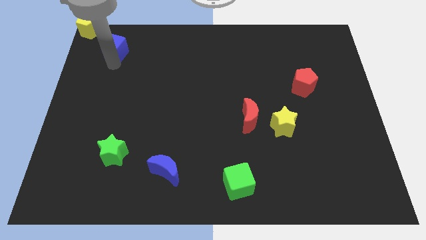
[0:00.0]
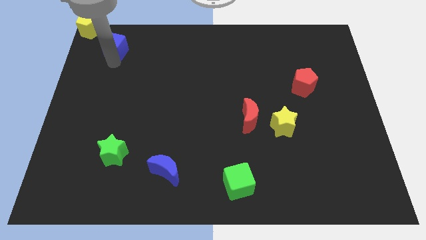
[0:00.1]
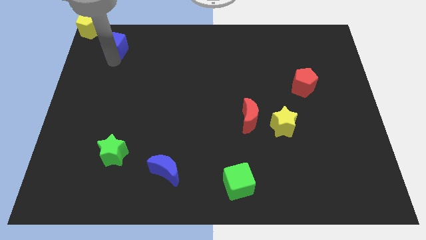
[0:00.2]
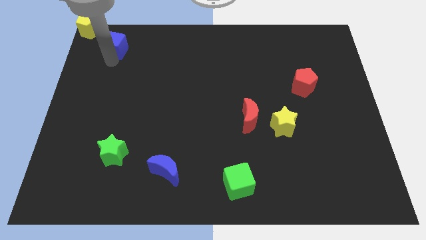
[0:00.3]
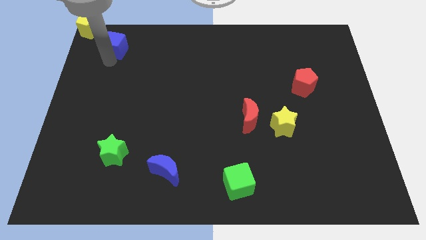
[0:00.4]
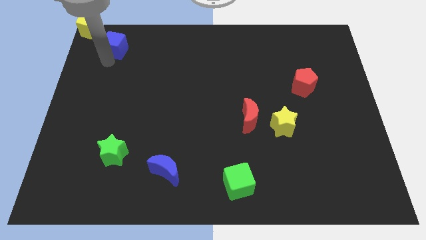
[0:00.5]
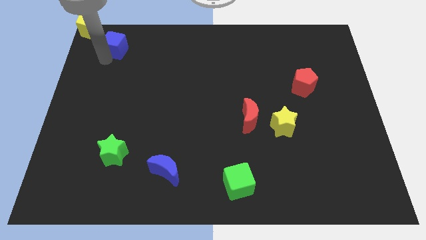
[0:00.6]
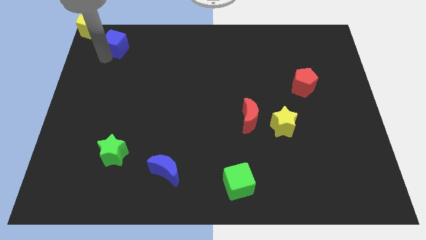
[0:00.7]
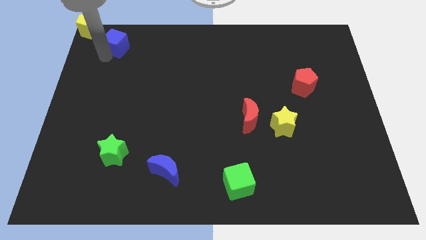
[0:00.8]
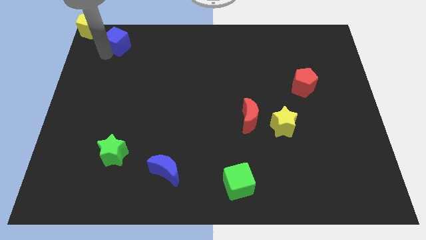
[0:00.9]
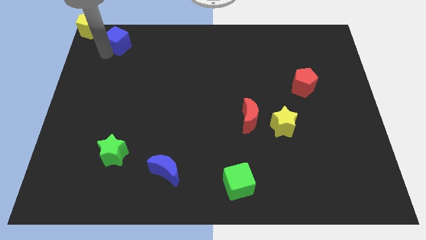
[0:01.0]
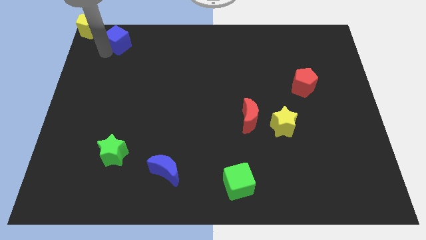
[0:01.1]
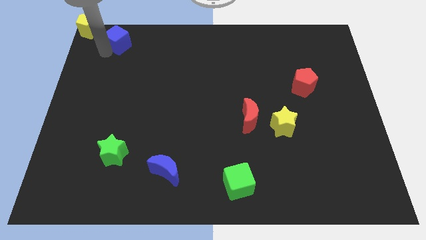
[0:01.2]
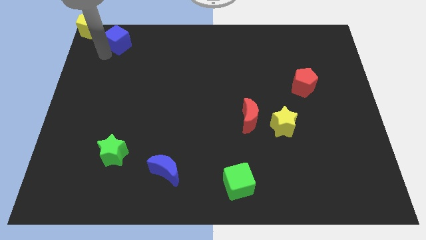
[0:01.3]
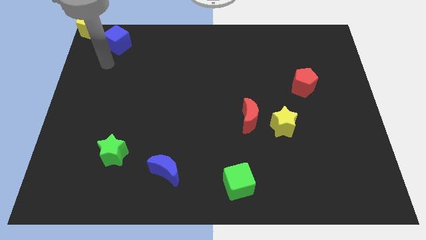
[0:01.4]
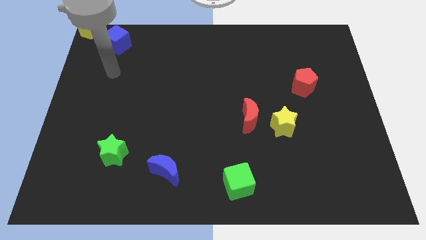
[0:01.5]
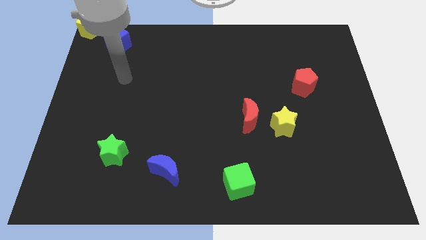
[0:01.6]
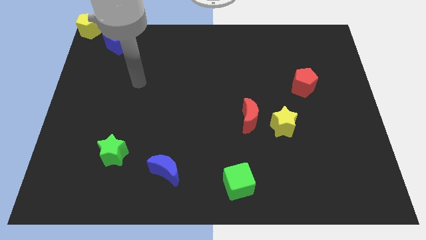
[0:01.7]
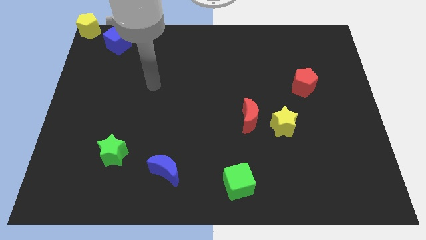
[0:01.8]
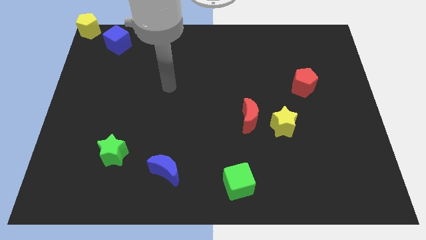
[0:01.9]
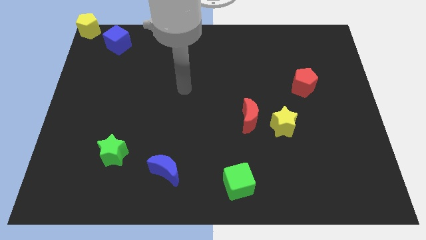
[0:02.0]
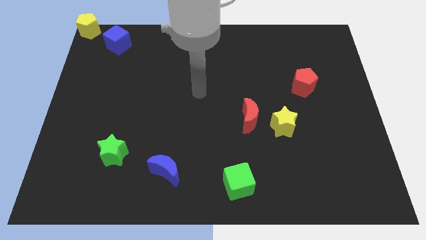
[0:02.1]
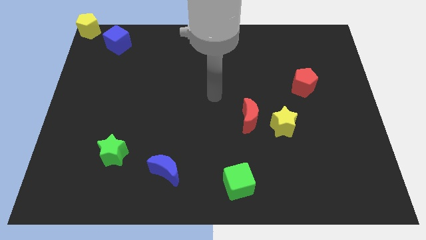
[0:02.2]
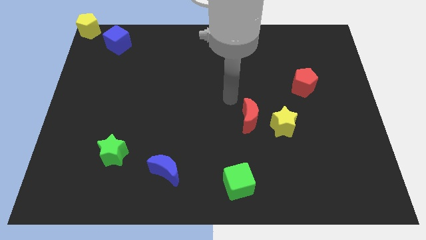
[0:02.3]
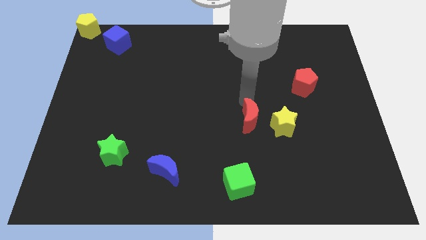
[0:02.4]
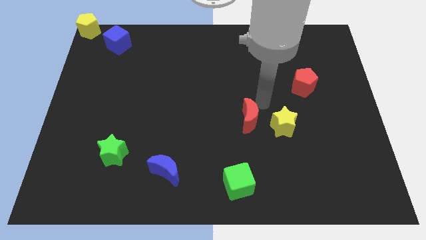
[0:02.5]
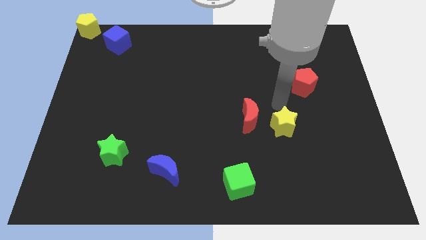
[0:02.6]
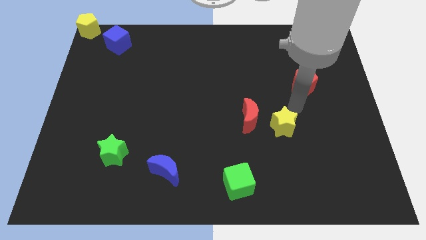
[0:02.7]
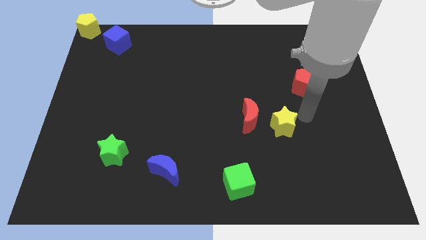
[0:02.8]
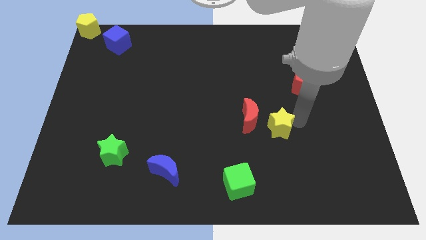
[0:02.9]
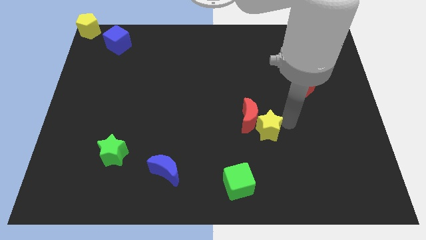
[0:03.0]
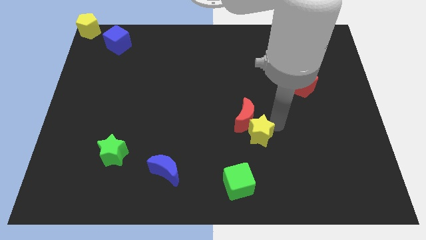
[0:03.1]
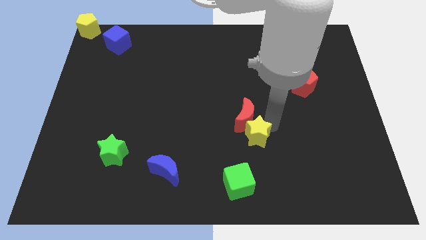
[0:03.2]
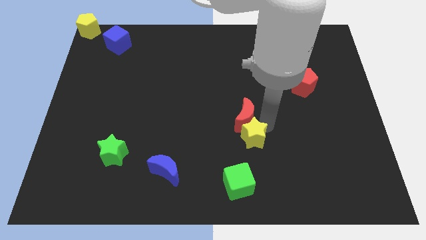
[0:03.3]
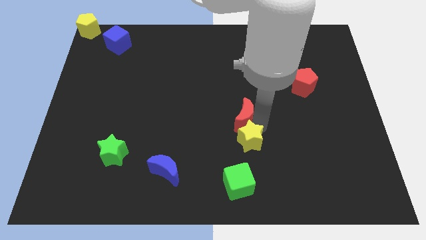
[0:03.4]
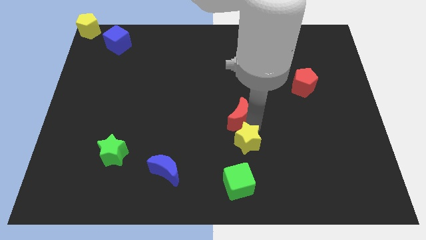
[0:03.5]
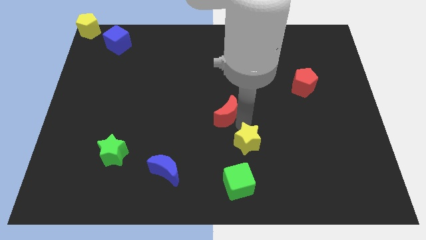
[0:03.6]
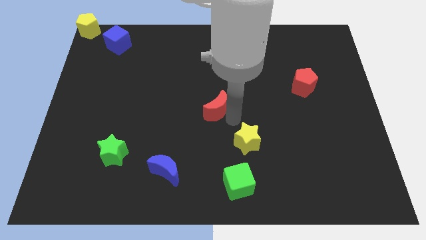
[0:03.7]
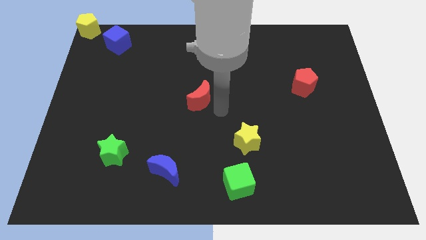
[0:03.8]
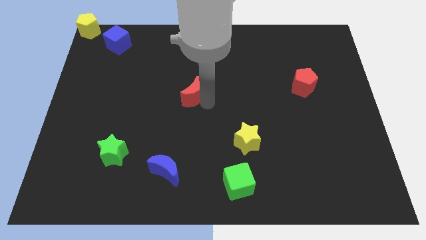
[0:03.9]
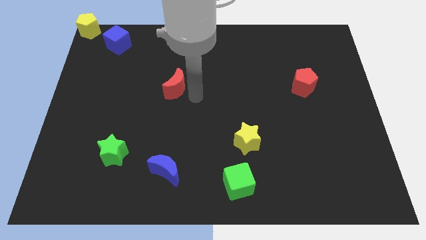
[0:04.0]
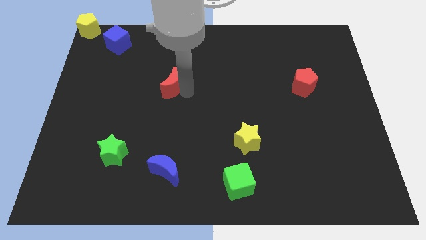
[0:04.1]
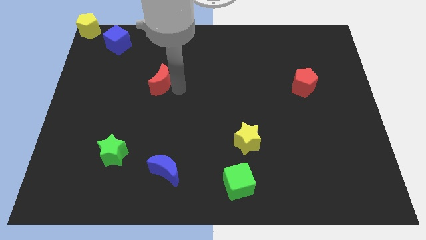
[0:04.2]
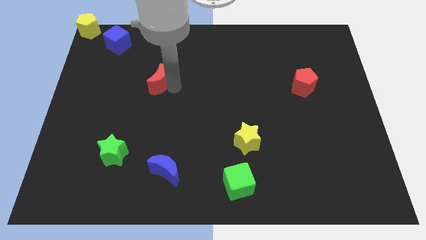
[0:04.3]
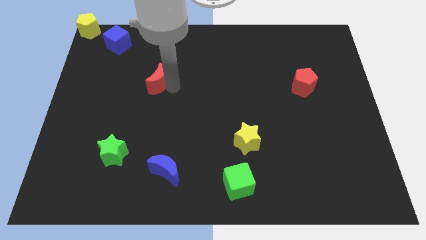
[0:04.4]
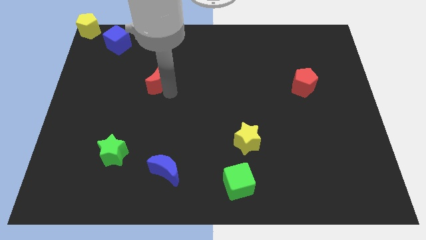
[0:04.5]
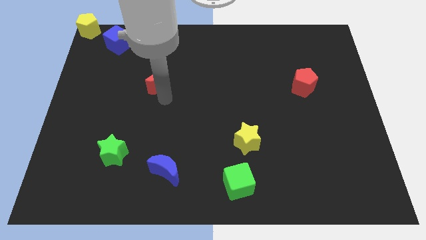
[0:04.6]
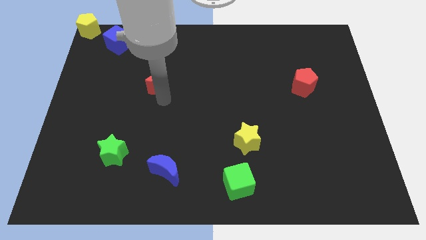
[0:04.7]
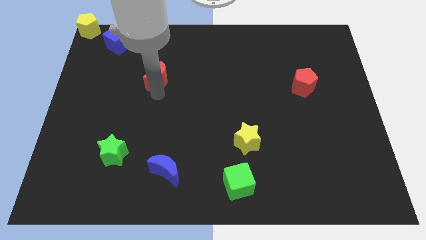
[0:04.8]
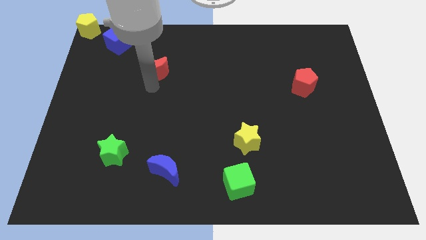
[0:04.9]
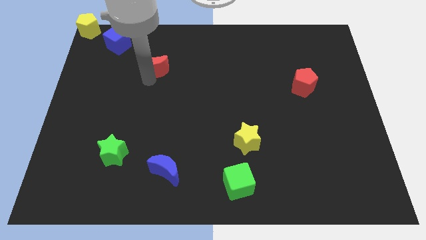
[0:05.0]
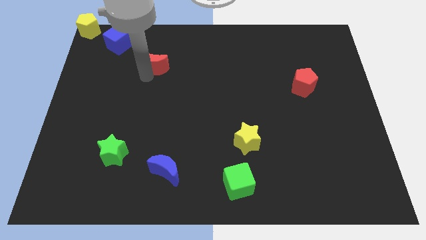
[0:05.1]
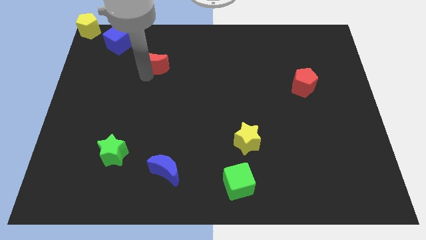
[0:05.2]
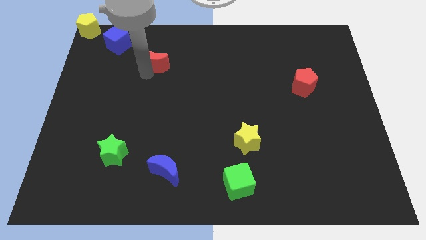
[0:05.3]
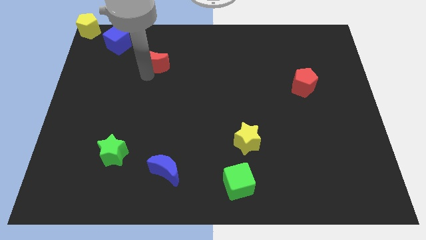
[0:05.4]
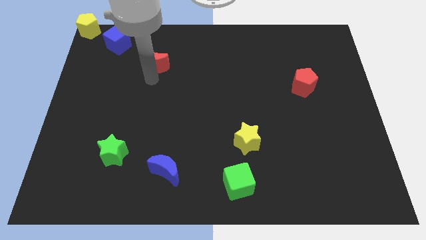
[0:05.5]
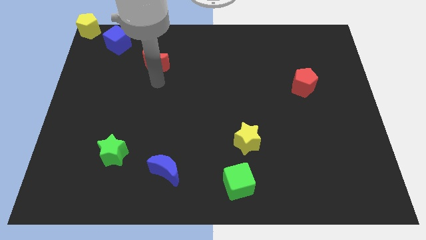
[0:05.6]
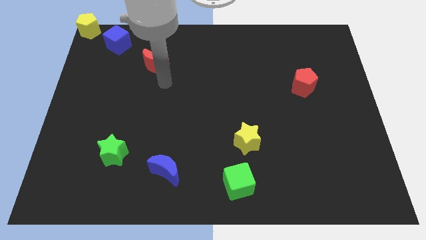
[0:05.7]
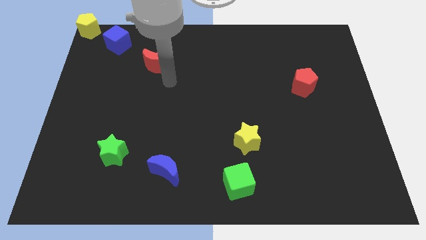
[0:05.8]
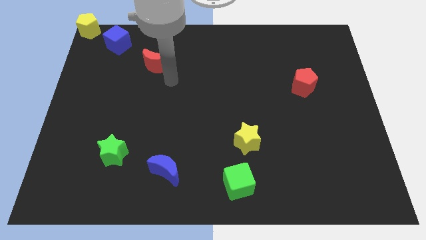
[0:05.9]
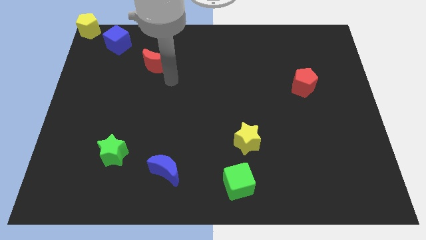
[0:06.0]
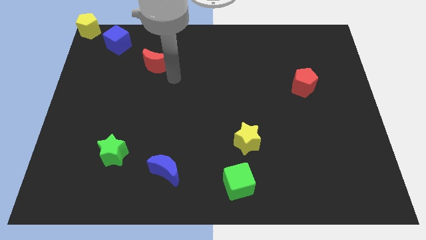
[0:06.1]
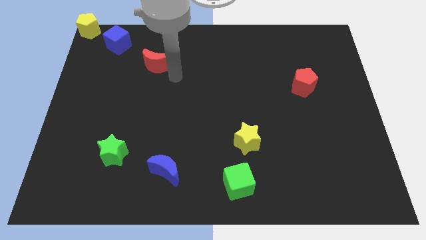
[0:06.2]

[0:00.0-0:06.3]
move the red crescent to bottom right of blue cube

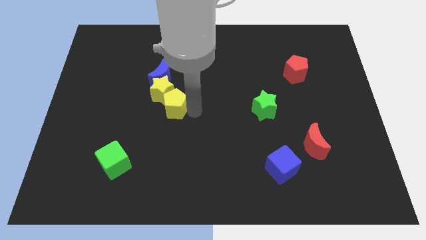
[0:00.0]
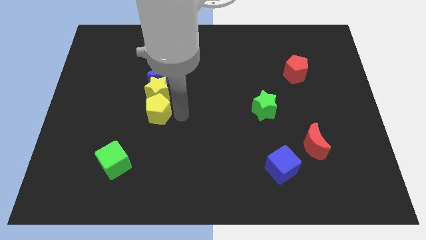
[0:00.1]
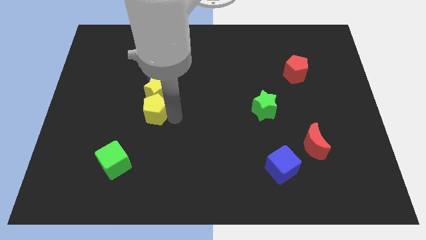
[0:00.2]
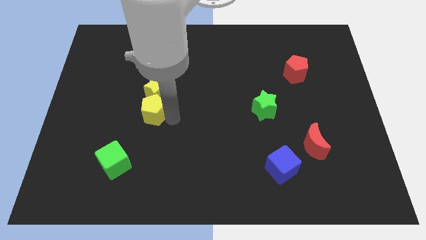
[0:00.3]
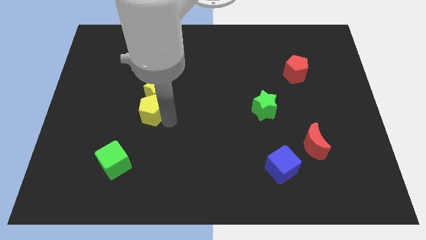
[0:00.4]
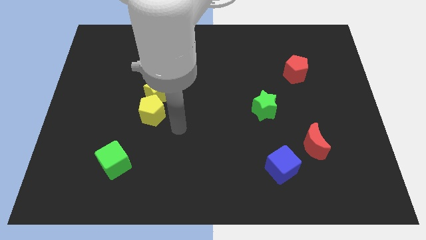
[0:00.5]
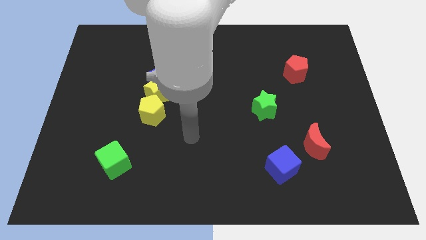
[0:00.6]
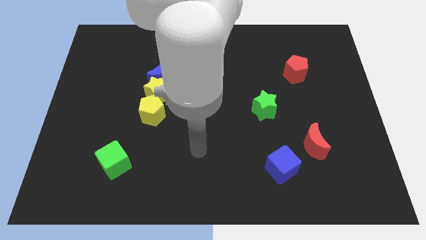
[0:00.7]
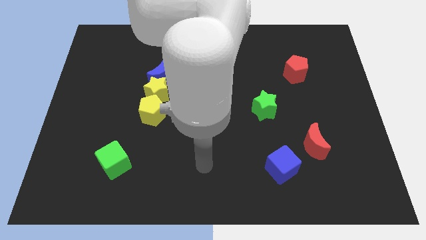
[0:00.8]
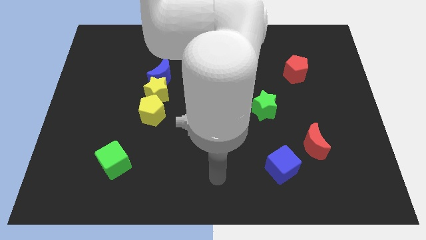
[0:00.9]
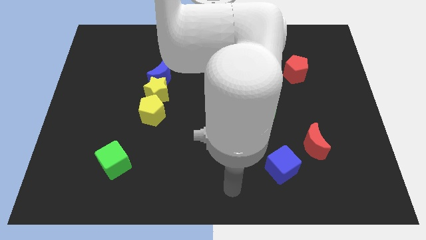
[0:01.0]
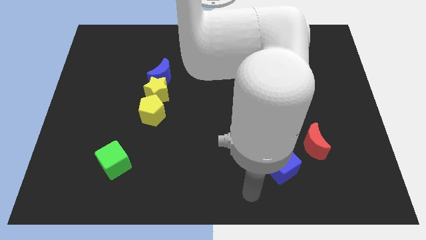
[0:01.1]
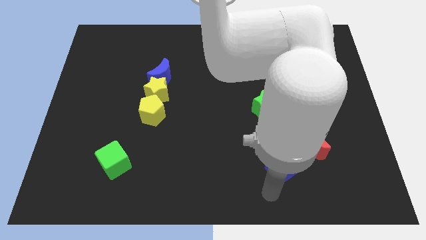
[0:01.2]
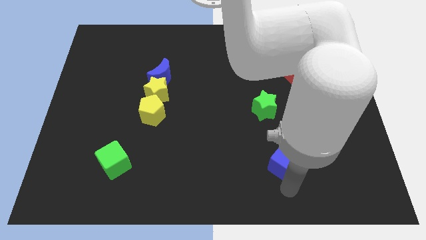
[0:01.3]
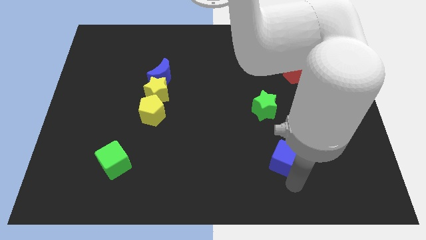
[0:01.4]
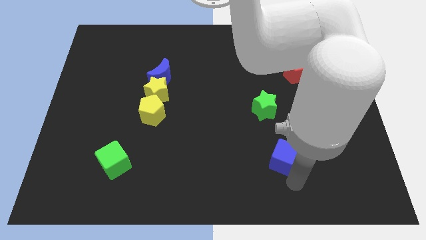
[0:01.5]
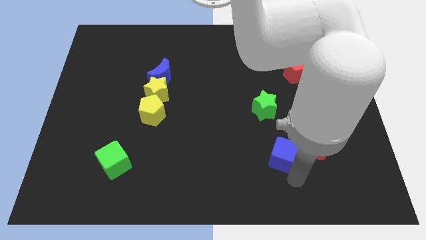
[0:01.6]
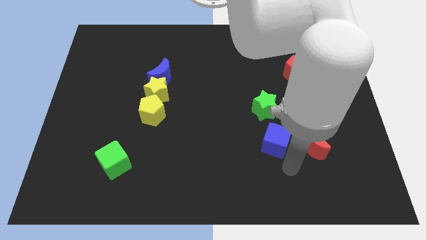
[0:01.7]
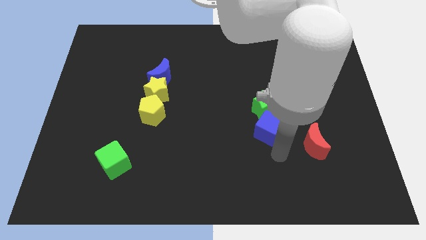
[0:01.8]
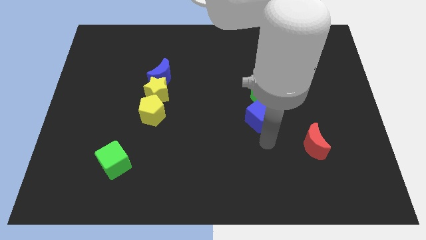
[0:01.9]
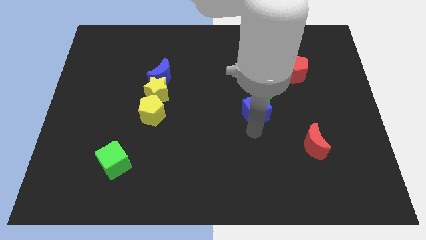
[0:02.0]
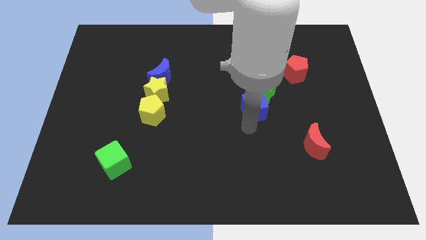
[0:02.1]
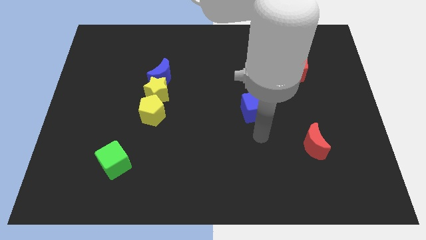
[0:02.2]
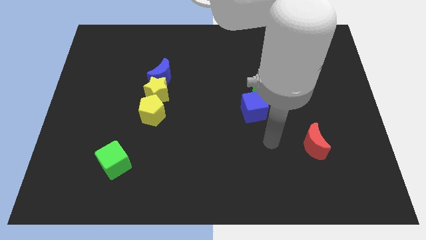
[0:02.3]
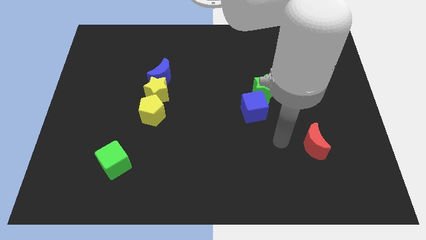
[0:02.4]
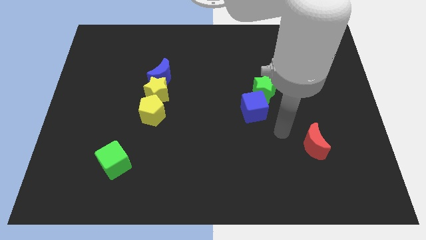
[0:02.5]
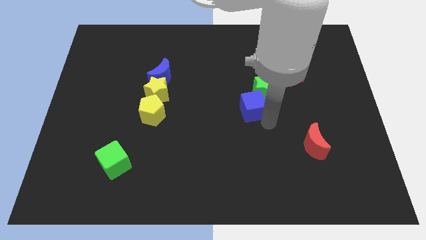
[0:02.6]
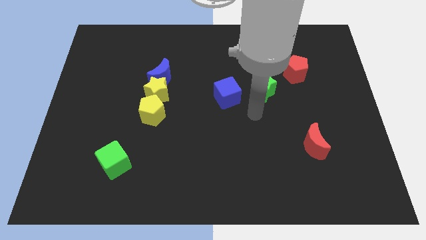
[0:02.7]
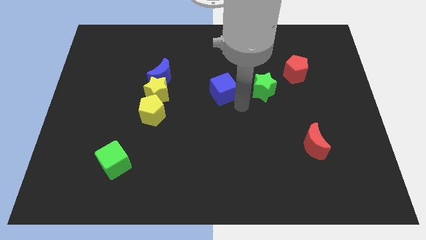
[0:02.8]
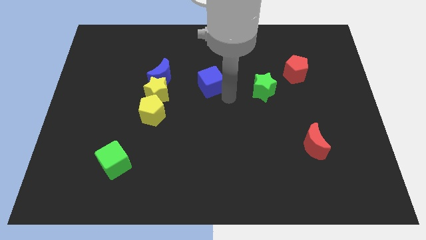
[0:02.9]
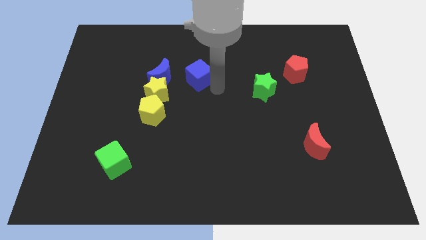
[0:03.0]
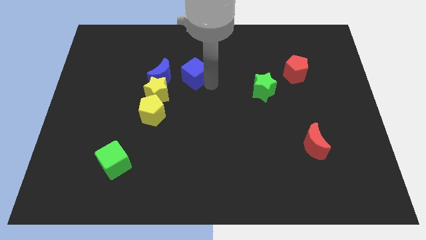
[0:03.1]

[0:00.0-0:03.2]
place the blue cube to the right side of the blue crescent
